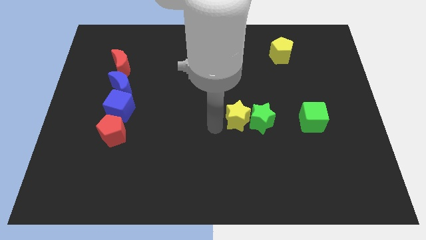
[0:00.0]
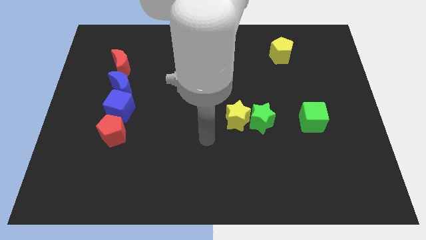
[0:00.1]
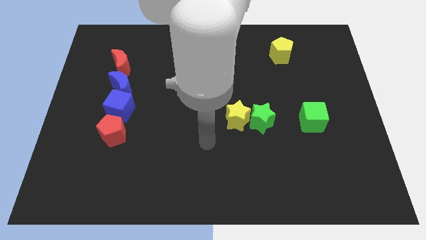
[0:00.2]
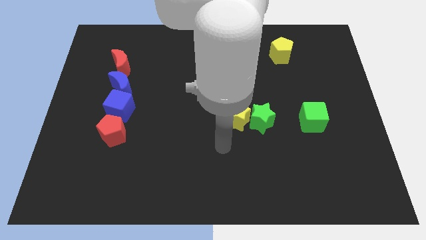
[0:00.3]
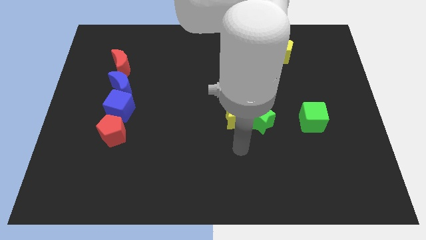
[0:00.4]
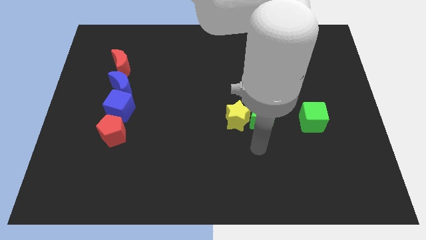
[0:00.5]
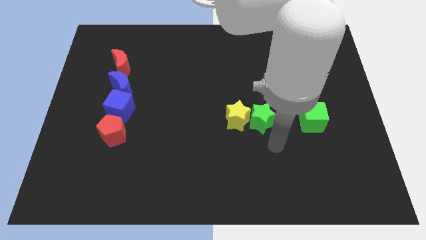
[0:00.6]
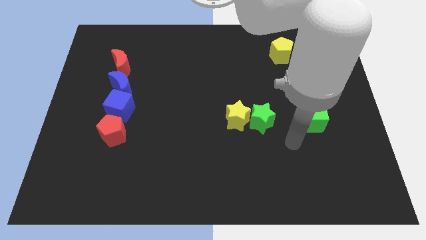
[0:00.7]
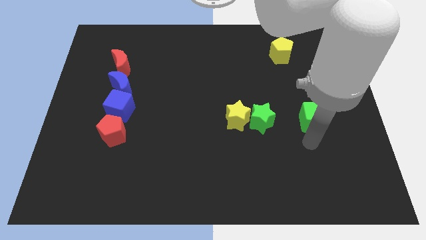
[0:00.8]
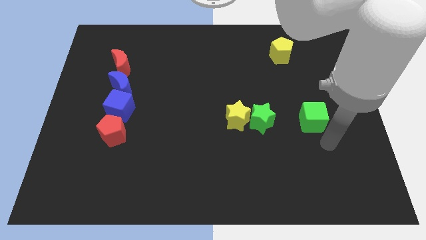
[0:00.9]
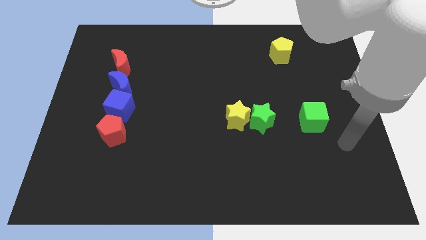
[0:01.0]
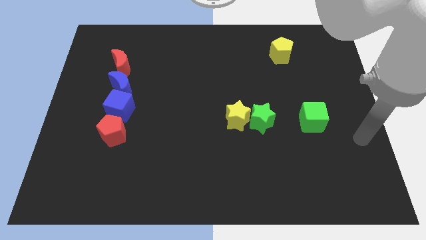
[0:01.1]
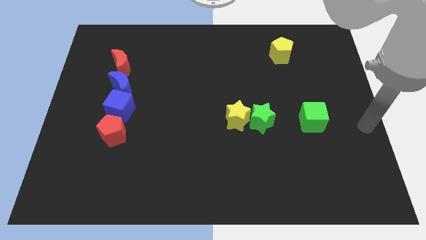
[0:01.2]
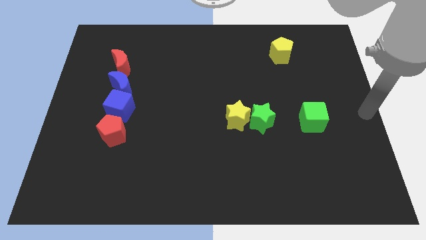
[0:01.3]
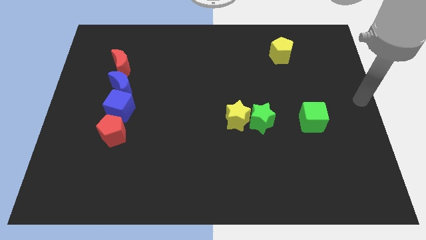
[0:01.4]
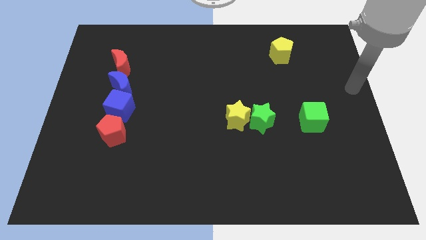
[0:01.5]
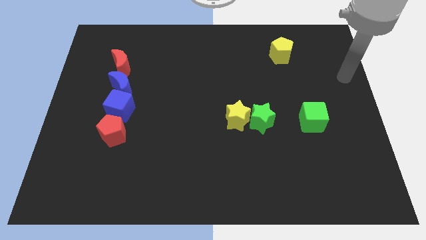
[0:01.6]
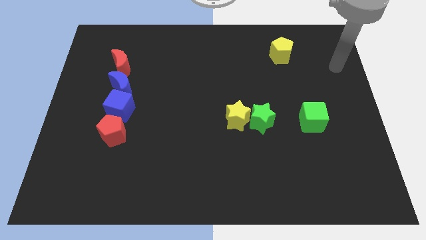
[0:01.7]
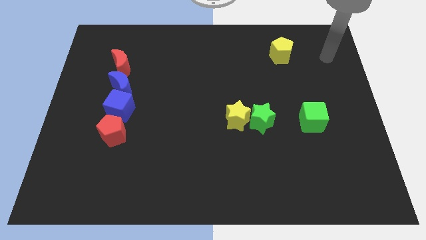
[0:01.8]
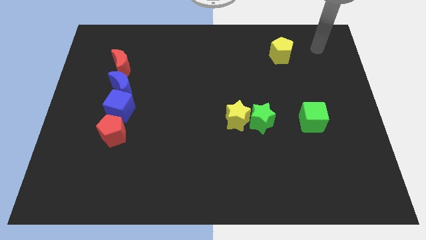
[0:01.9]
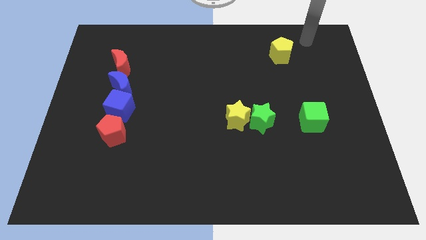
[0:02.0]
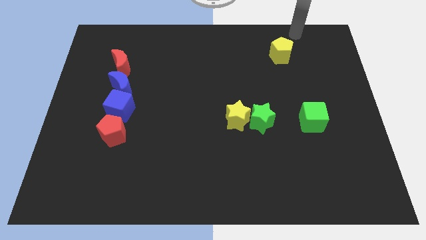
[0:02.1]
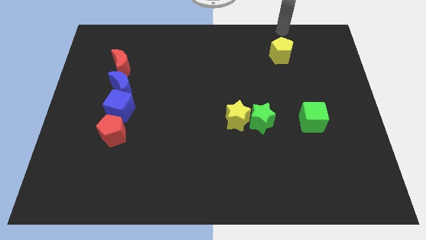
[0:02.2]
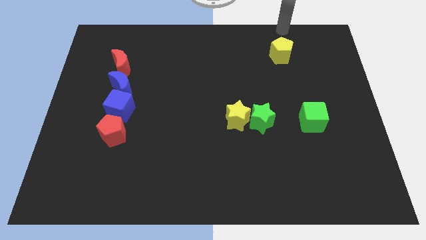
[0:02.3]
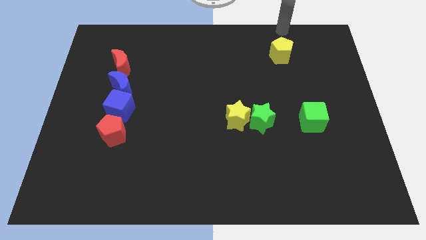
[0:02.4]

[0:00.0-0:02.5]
move your arm above the yellow pentagon

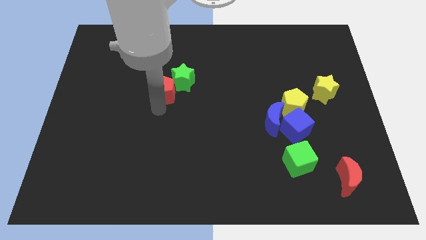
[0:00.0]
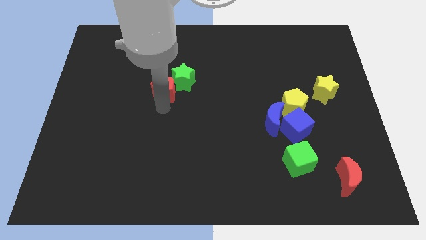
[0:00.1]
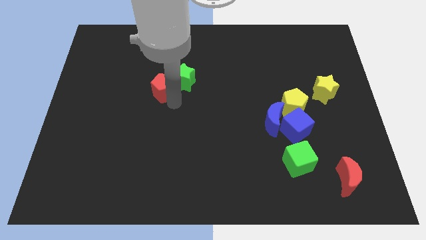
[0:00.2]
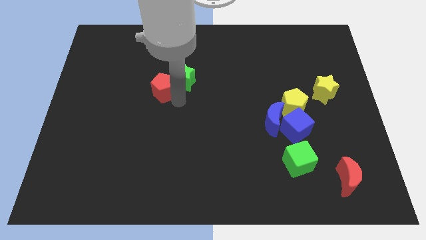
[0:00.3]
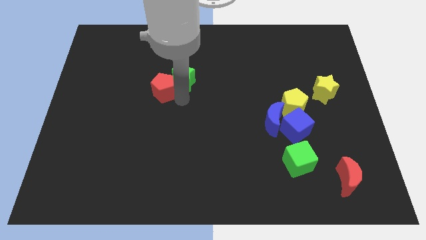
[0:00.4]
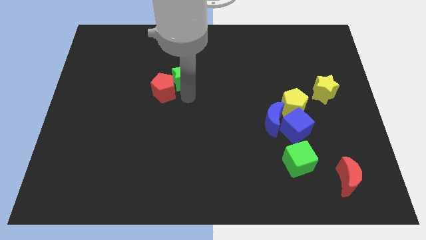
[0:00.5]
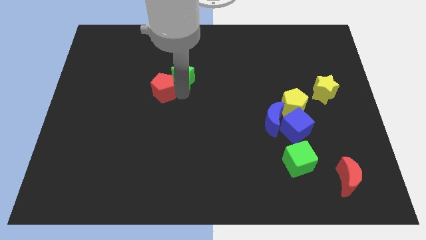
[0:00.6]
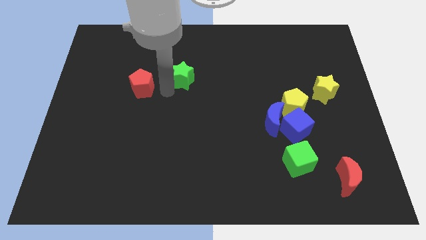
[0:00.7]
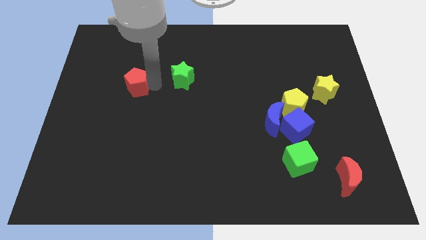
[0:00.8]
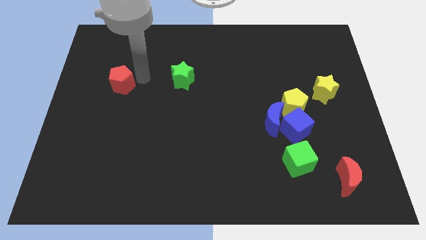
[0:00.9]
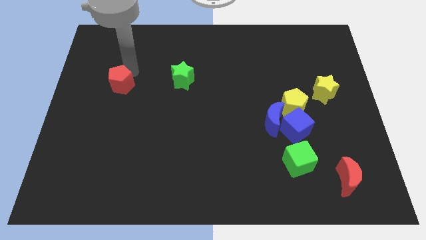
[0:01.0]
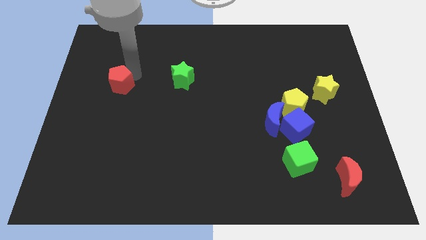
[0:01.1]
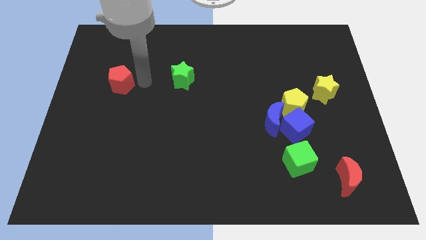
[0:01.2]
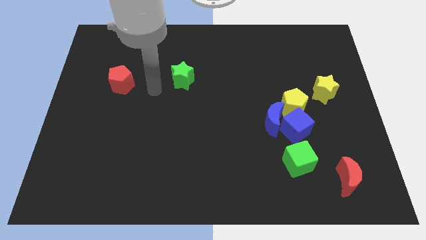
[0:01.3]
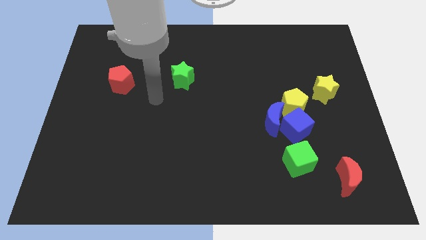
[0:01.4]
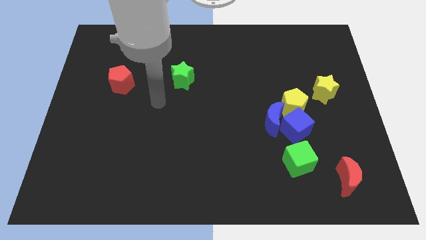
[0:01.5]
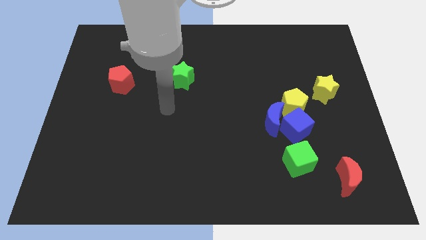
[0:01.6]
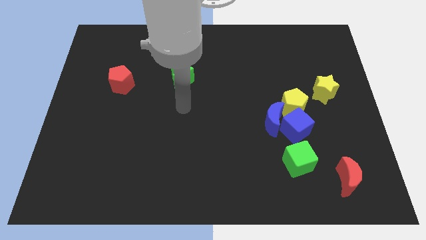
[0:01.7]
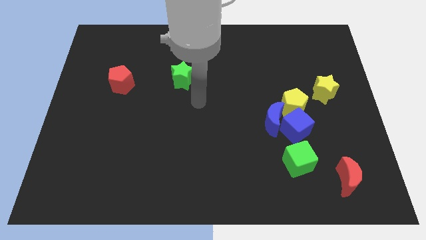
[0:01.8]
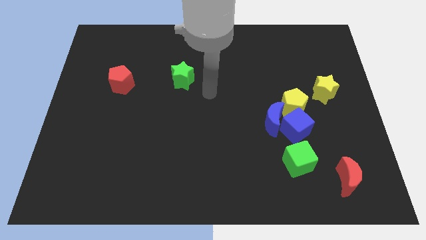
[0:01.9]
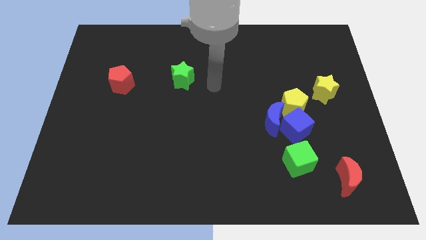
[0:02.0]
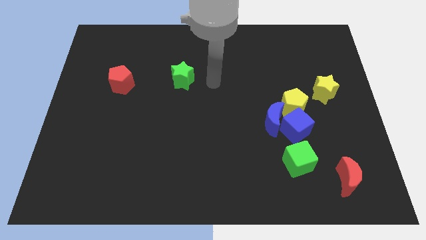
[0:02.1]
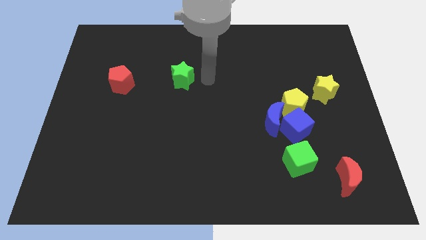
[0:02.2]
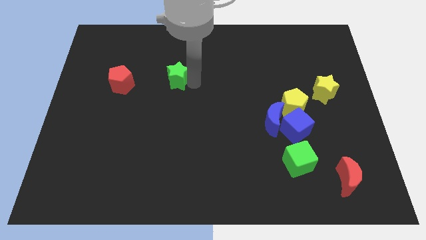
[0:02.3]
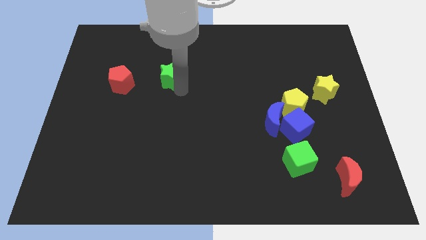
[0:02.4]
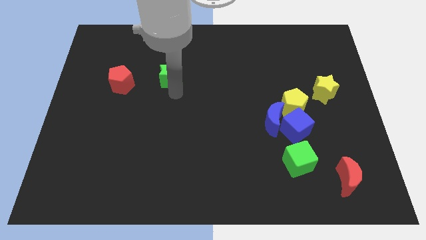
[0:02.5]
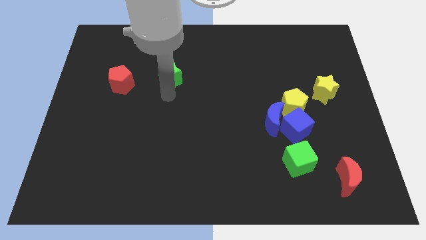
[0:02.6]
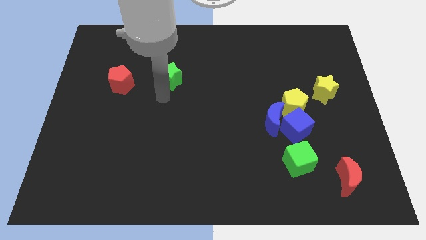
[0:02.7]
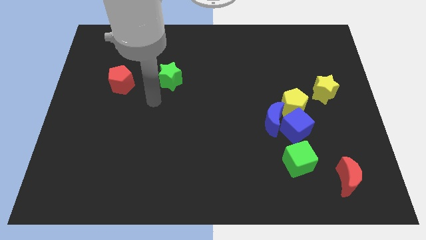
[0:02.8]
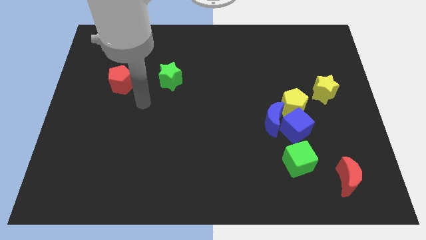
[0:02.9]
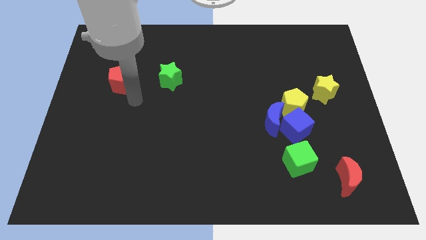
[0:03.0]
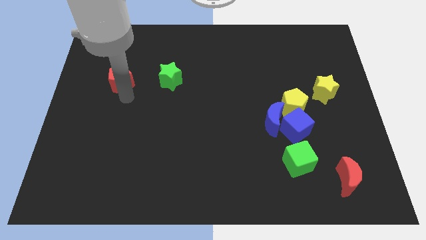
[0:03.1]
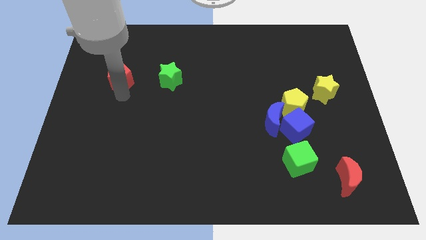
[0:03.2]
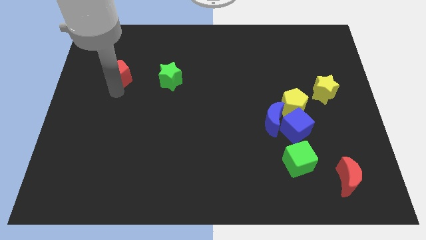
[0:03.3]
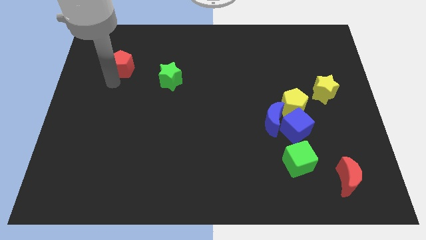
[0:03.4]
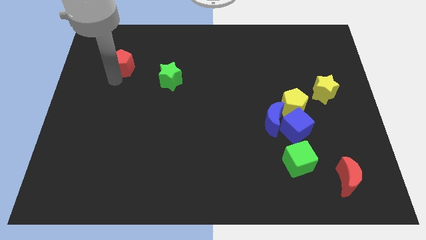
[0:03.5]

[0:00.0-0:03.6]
place red pentagon parallel left to red pentagon

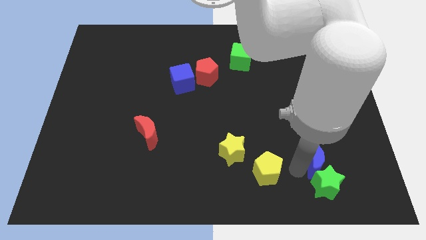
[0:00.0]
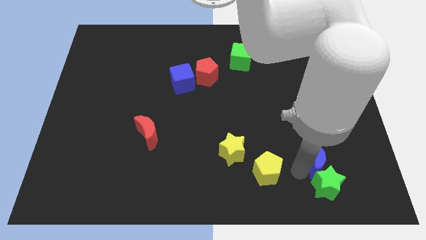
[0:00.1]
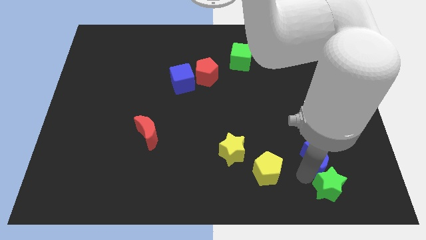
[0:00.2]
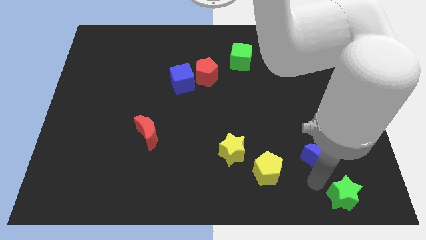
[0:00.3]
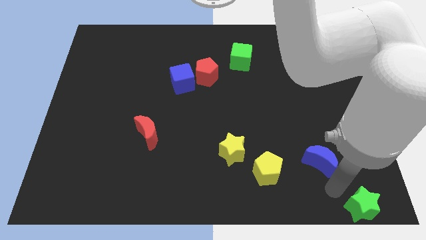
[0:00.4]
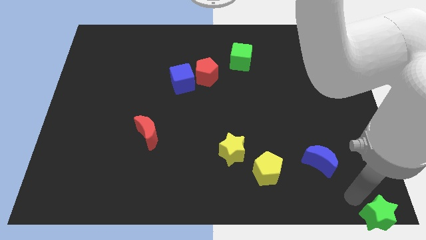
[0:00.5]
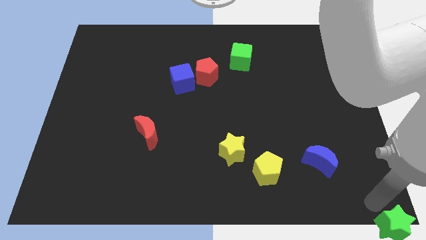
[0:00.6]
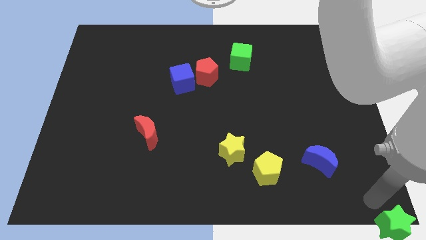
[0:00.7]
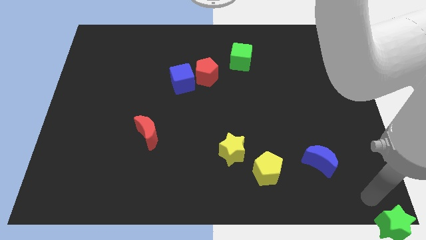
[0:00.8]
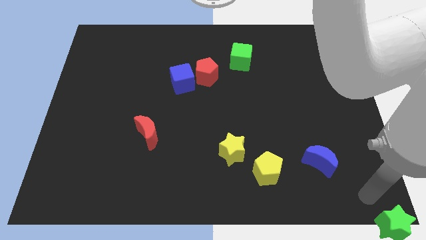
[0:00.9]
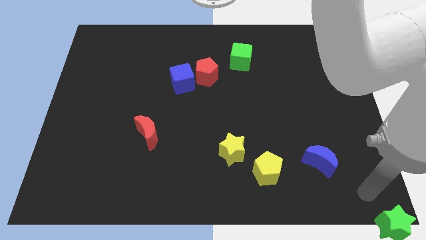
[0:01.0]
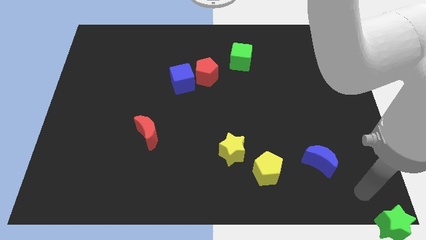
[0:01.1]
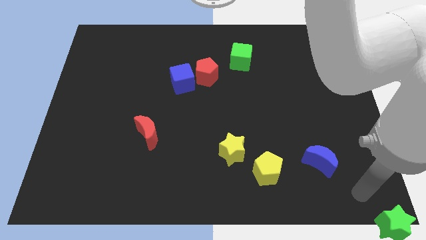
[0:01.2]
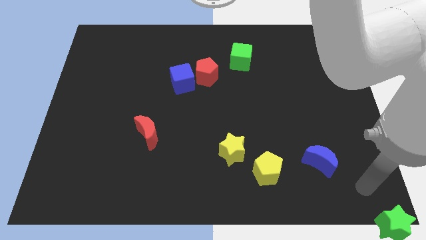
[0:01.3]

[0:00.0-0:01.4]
separate green star from the blue moon

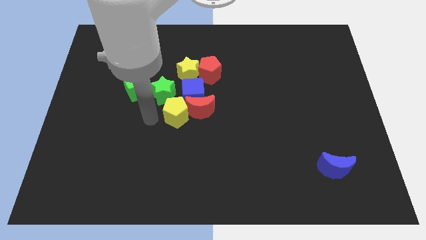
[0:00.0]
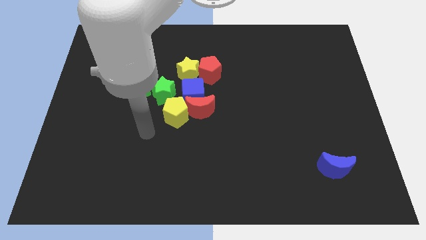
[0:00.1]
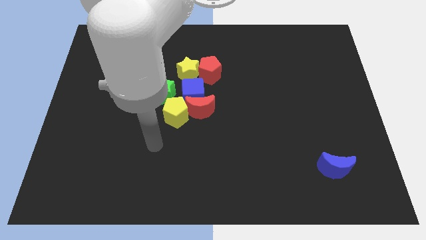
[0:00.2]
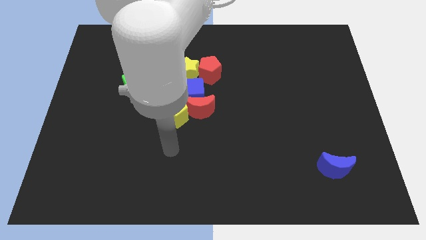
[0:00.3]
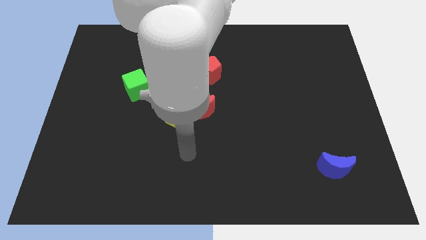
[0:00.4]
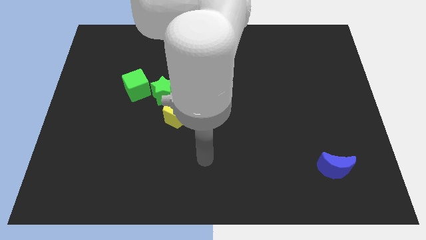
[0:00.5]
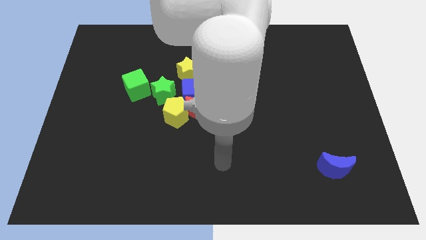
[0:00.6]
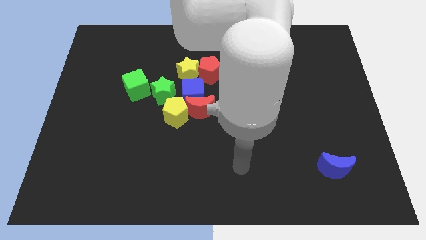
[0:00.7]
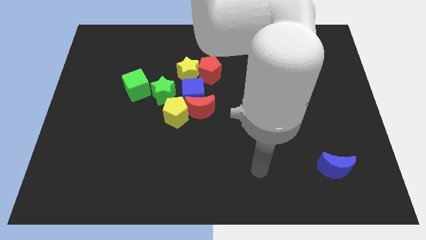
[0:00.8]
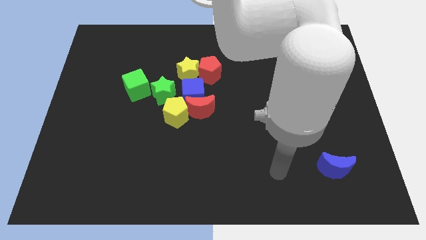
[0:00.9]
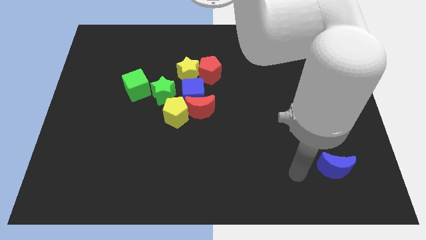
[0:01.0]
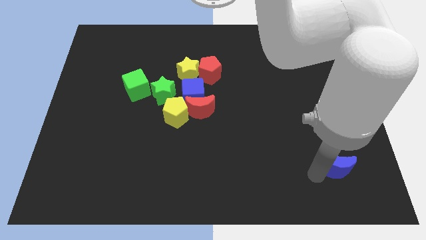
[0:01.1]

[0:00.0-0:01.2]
move your arm close to the blue moon
